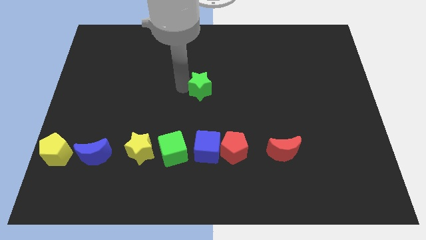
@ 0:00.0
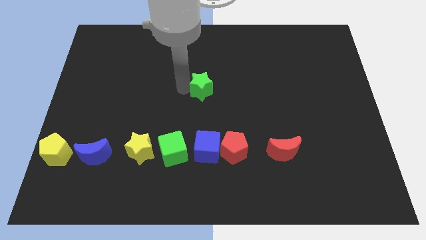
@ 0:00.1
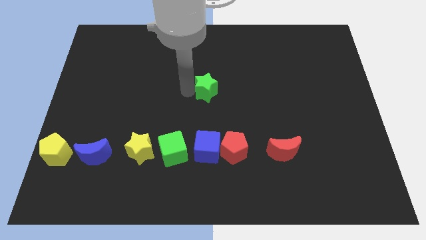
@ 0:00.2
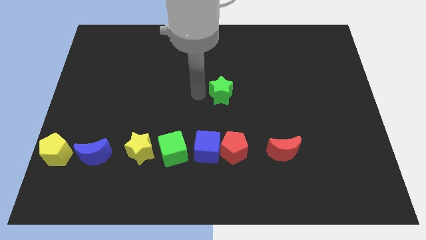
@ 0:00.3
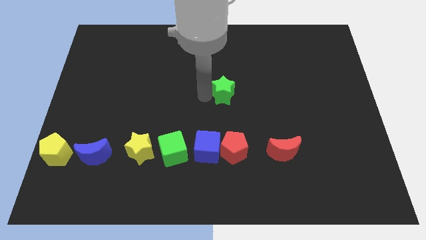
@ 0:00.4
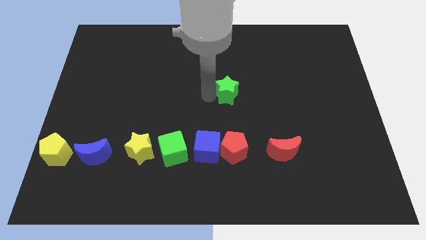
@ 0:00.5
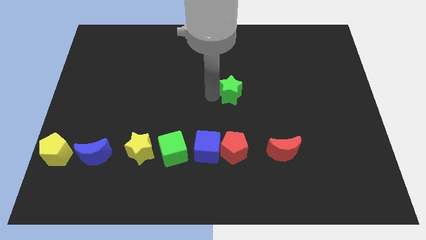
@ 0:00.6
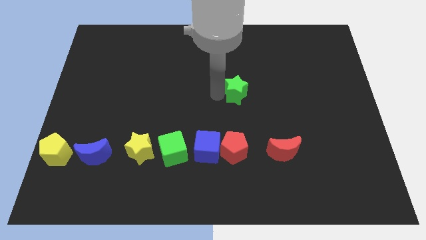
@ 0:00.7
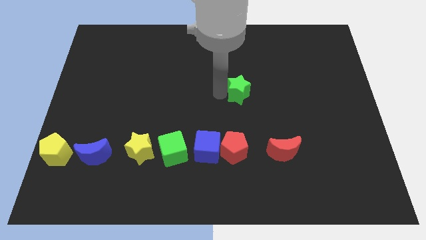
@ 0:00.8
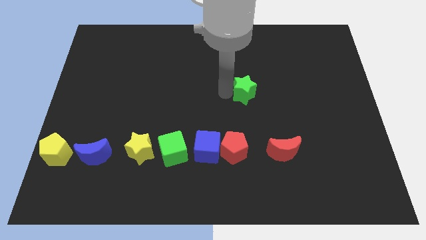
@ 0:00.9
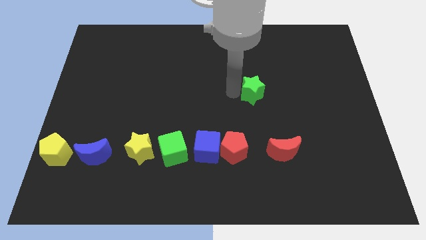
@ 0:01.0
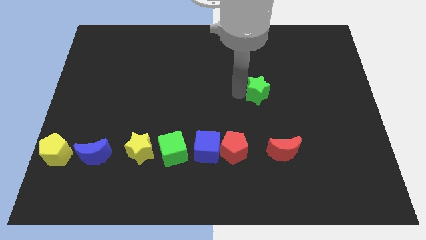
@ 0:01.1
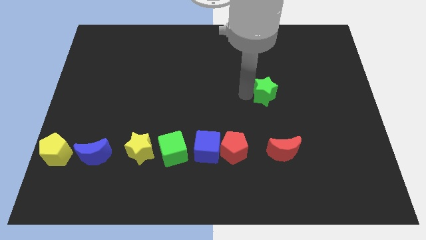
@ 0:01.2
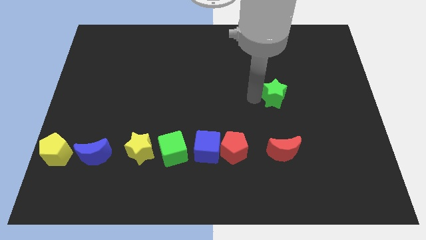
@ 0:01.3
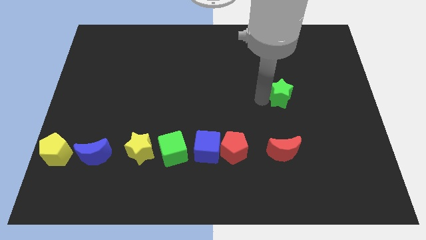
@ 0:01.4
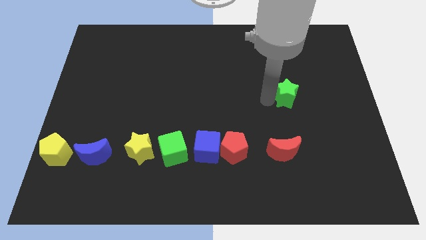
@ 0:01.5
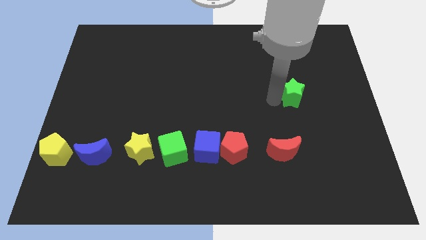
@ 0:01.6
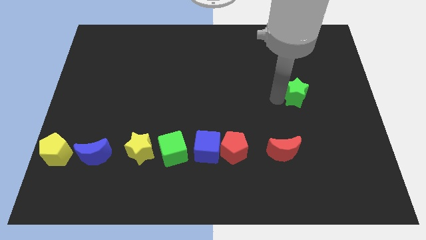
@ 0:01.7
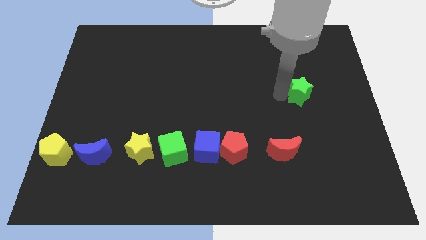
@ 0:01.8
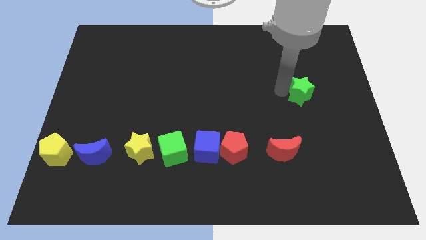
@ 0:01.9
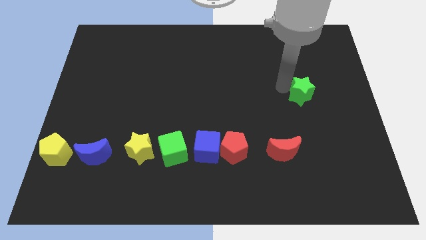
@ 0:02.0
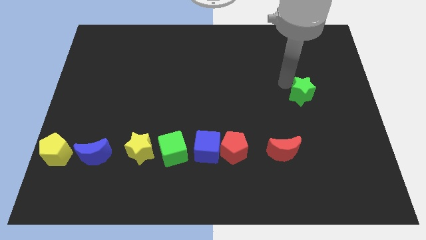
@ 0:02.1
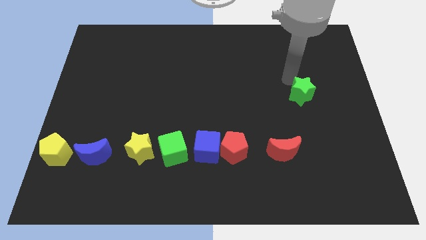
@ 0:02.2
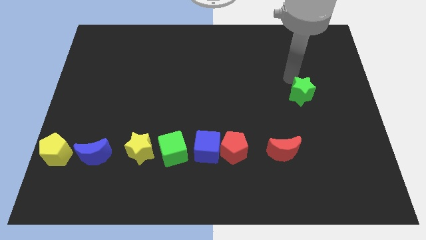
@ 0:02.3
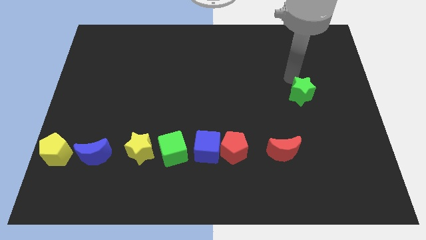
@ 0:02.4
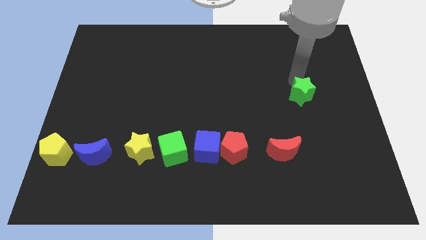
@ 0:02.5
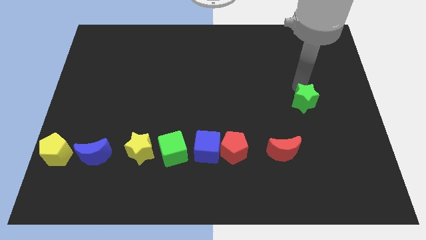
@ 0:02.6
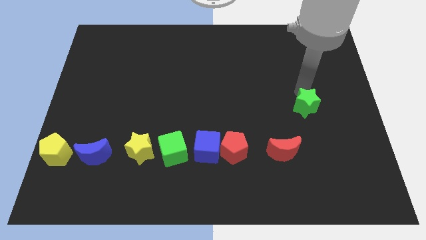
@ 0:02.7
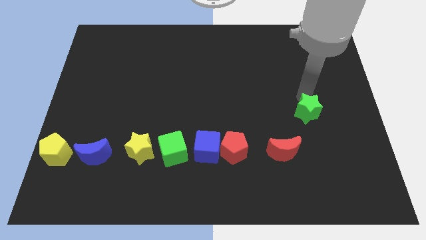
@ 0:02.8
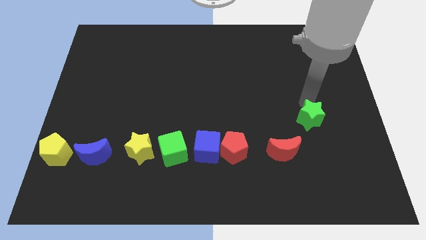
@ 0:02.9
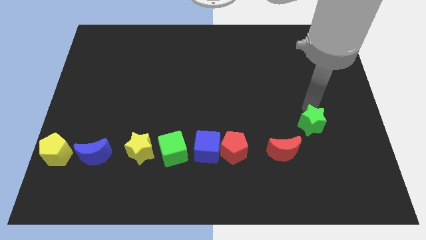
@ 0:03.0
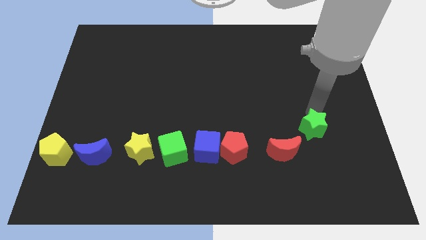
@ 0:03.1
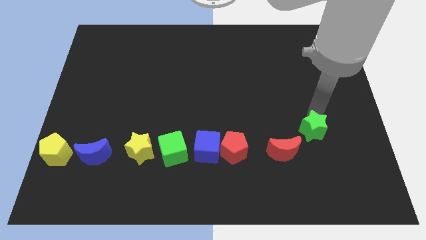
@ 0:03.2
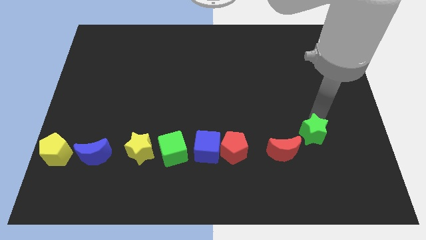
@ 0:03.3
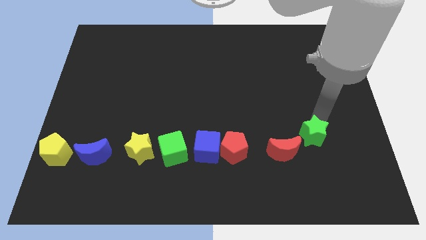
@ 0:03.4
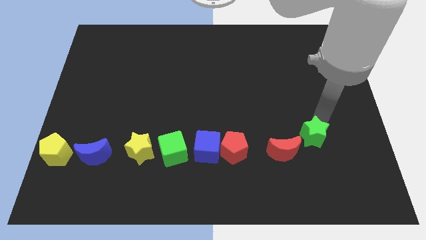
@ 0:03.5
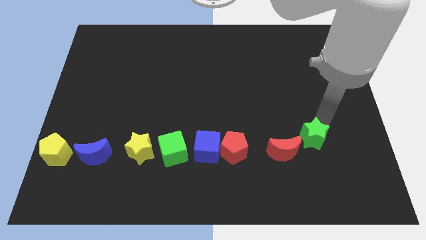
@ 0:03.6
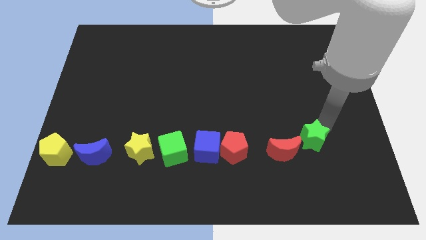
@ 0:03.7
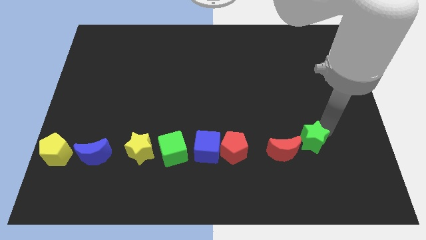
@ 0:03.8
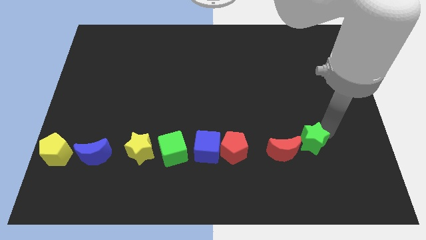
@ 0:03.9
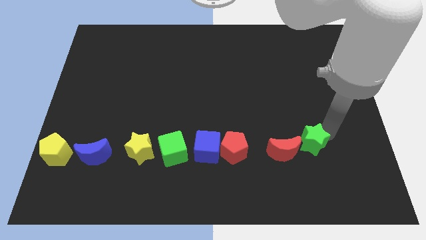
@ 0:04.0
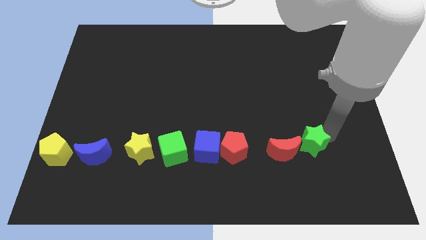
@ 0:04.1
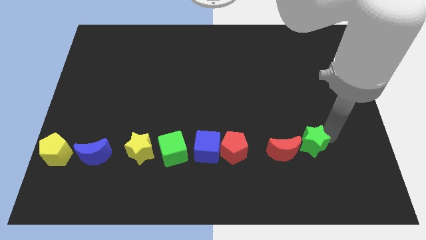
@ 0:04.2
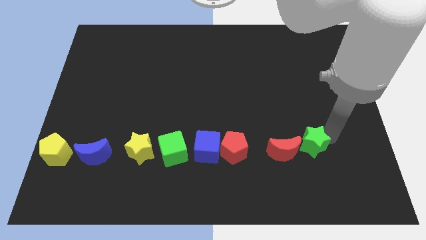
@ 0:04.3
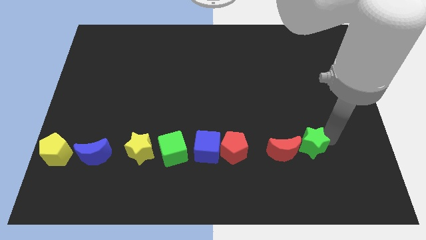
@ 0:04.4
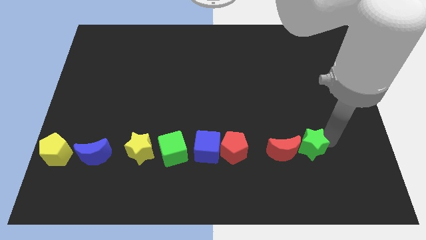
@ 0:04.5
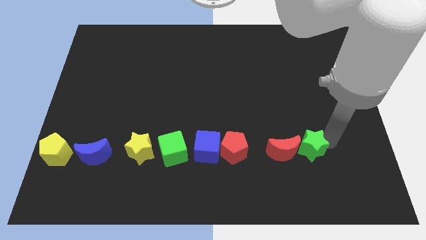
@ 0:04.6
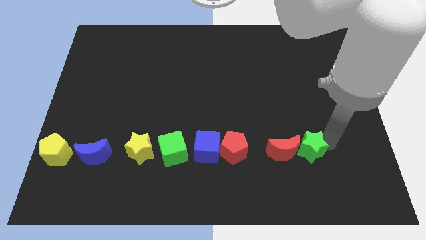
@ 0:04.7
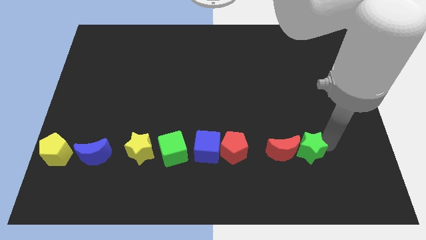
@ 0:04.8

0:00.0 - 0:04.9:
move the green star to the right of the red moon

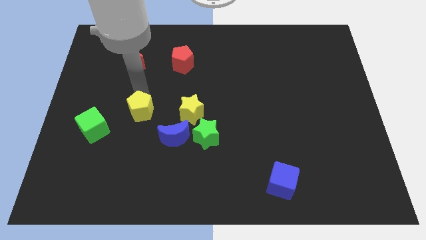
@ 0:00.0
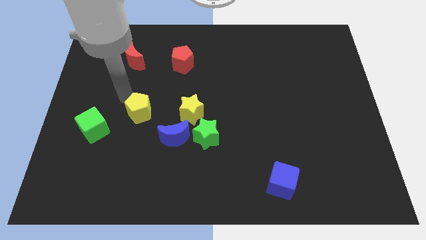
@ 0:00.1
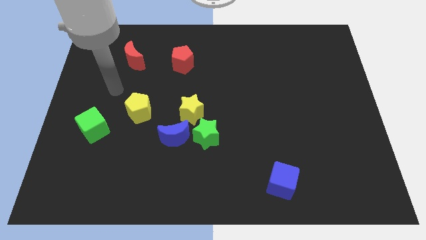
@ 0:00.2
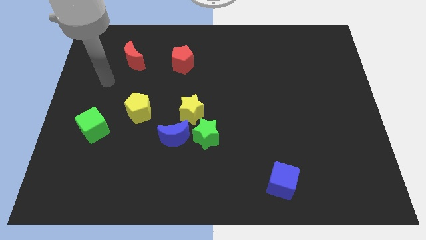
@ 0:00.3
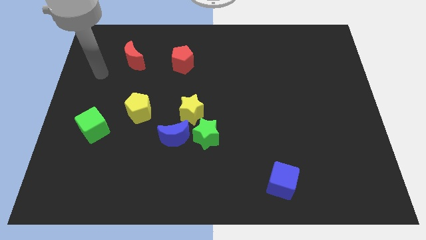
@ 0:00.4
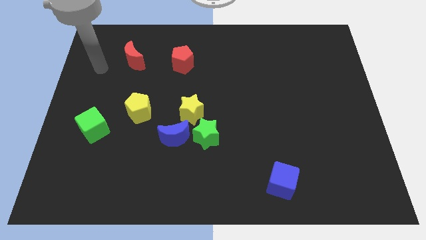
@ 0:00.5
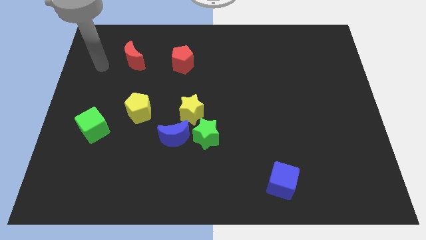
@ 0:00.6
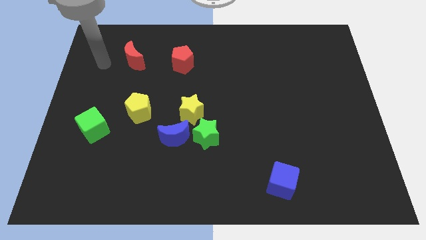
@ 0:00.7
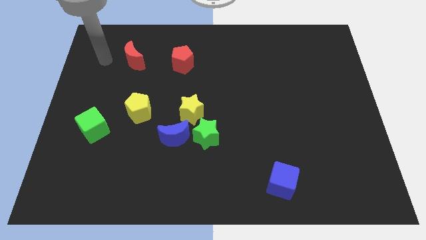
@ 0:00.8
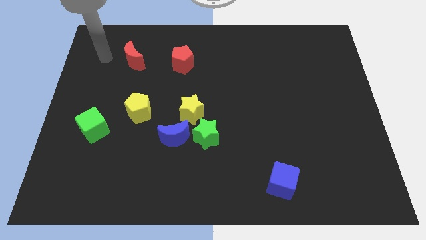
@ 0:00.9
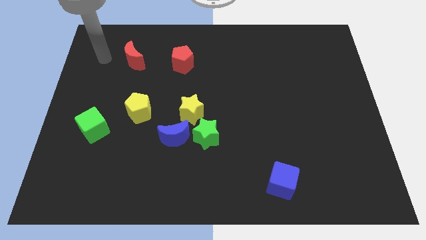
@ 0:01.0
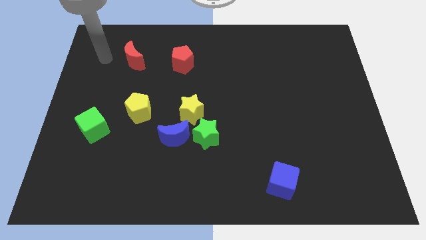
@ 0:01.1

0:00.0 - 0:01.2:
move your arm to the right of the red moon

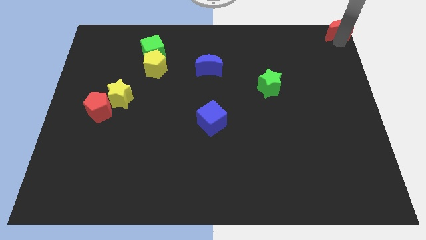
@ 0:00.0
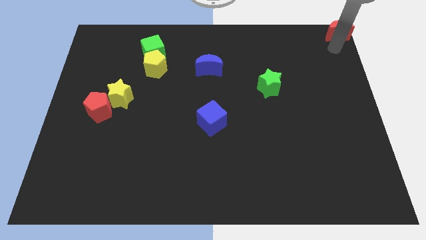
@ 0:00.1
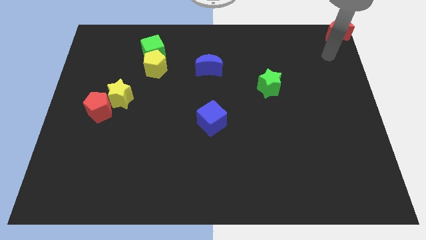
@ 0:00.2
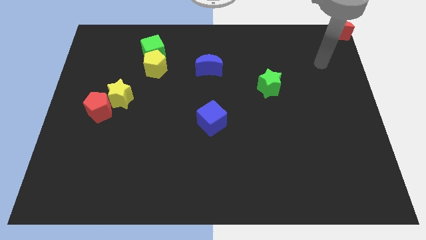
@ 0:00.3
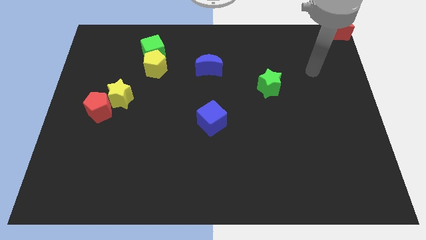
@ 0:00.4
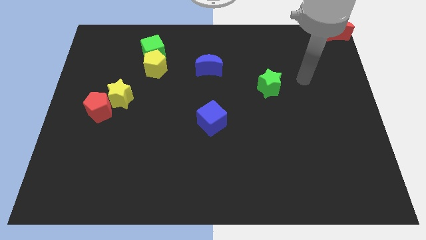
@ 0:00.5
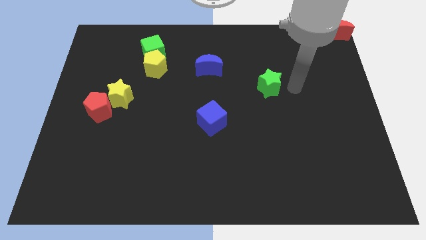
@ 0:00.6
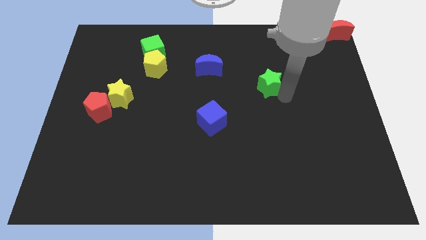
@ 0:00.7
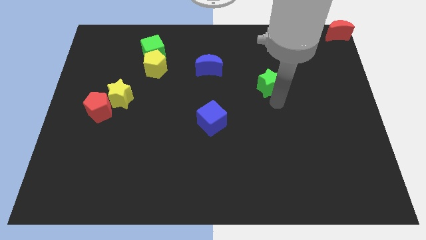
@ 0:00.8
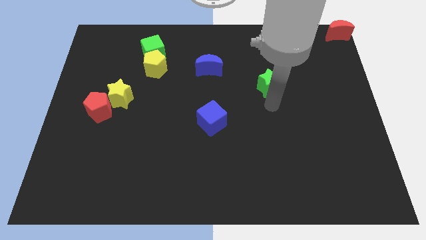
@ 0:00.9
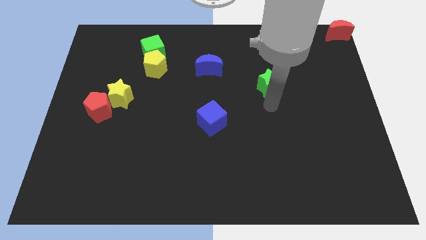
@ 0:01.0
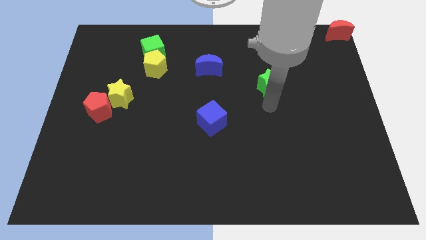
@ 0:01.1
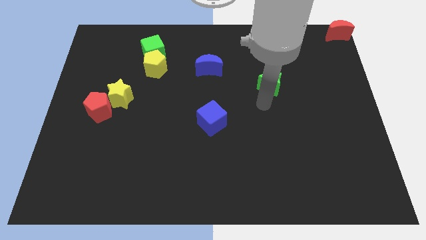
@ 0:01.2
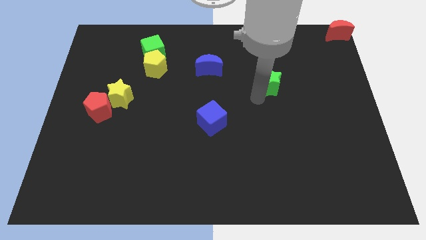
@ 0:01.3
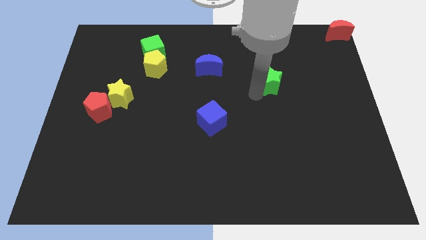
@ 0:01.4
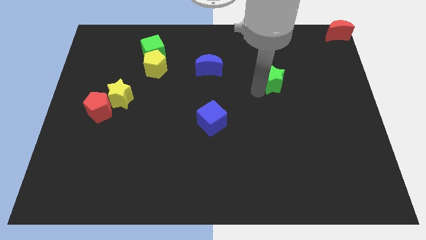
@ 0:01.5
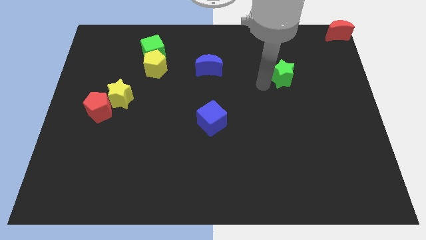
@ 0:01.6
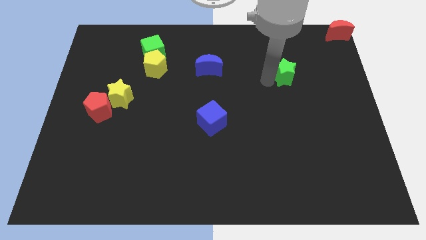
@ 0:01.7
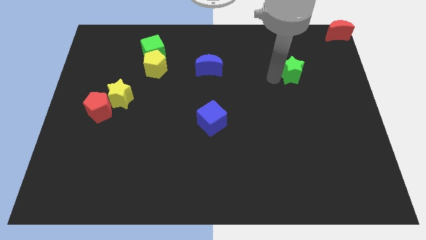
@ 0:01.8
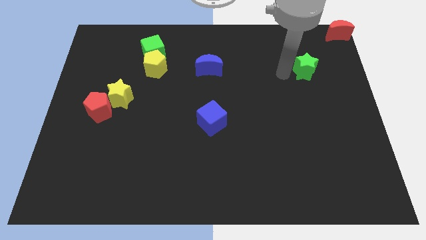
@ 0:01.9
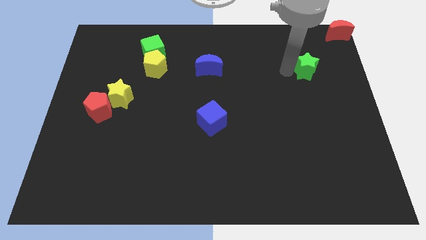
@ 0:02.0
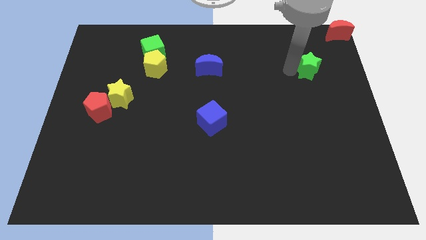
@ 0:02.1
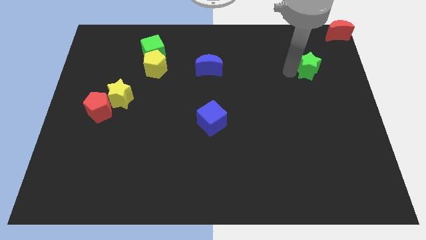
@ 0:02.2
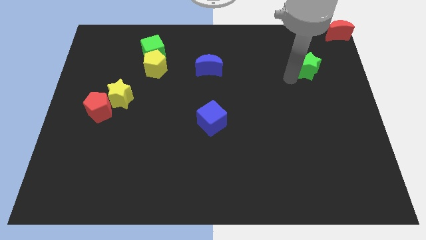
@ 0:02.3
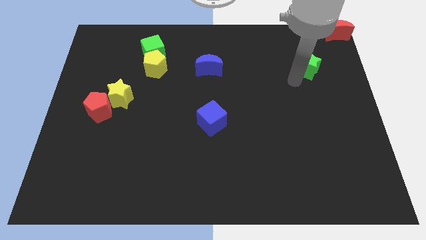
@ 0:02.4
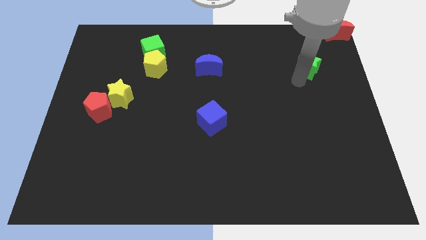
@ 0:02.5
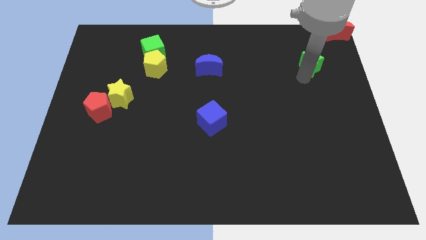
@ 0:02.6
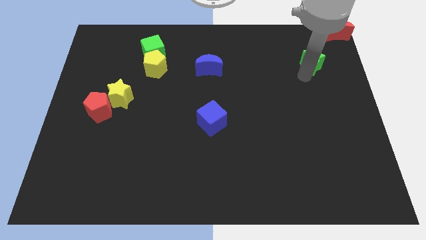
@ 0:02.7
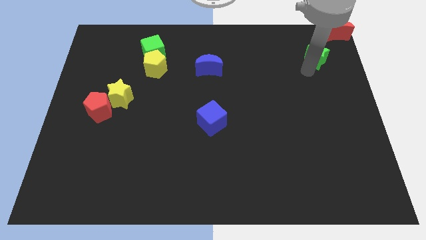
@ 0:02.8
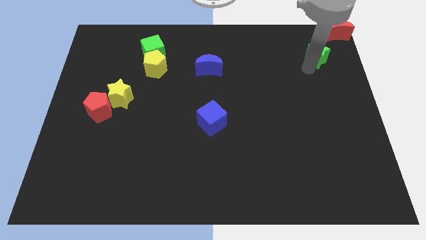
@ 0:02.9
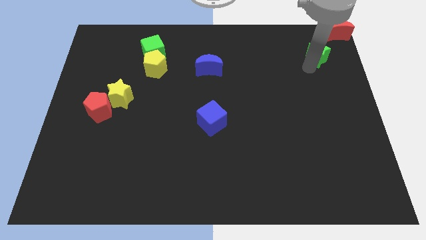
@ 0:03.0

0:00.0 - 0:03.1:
move the green star towards bottom of red moon
